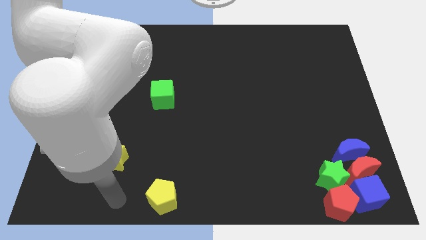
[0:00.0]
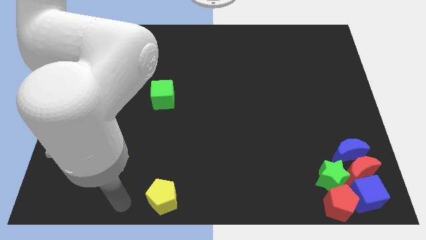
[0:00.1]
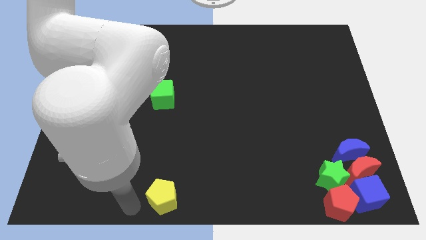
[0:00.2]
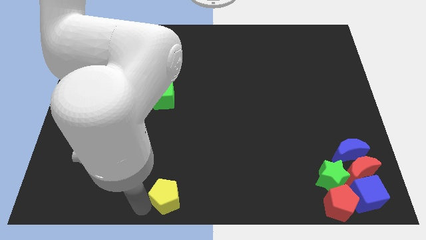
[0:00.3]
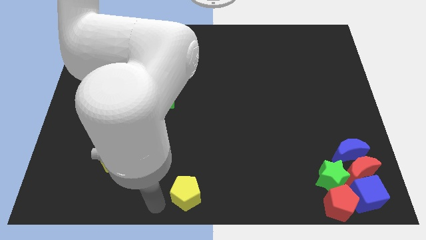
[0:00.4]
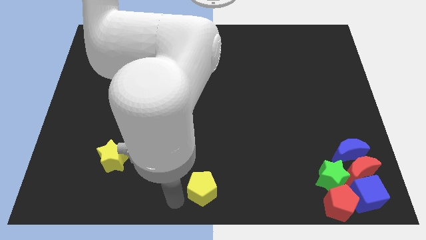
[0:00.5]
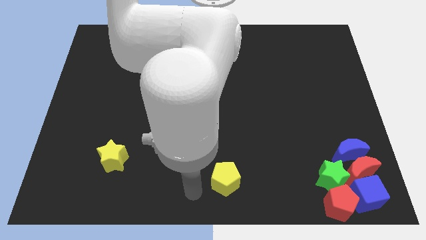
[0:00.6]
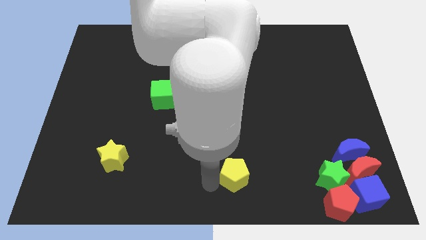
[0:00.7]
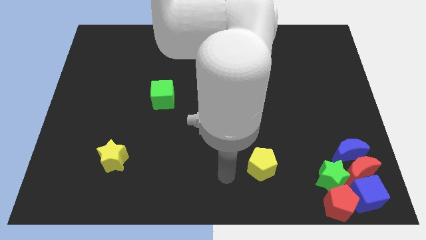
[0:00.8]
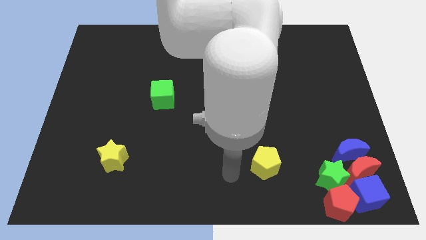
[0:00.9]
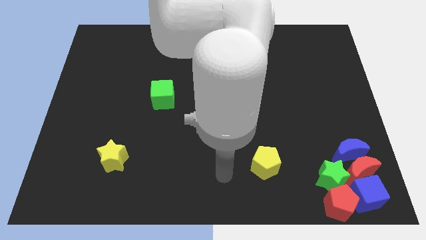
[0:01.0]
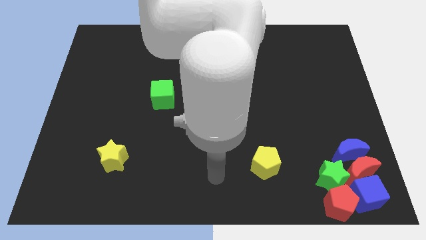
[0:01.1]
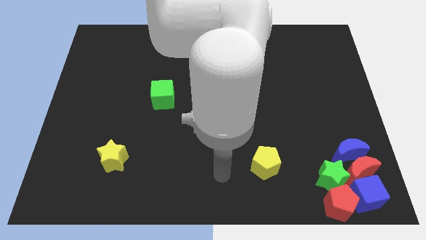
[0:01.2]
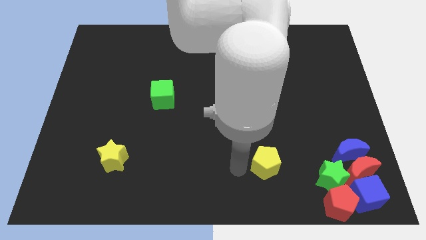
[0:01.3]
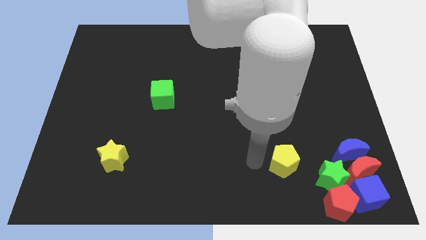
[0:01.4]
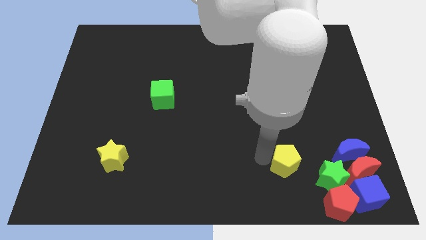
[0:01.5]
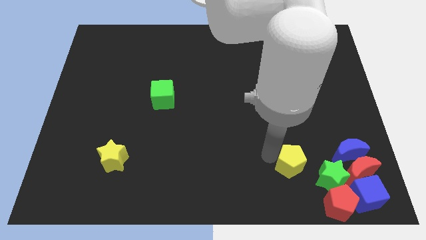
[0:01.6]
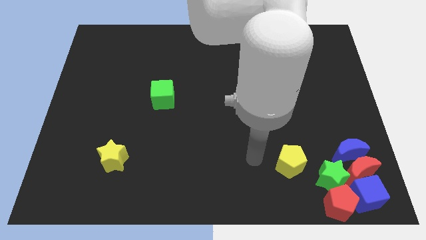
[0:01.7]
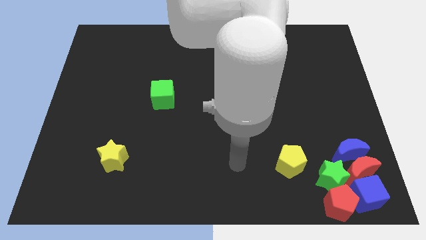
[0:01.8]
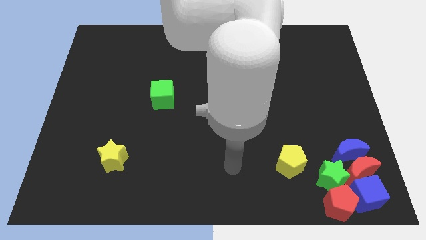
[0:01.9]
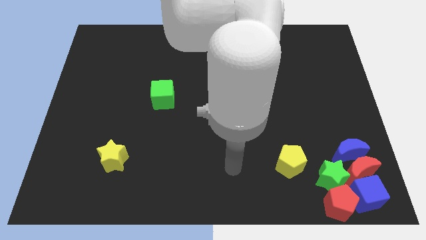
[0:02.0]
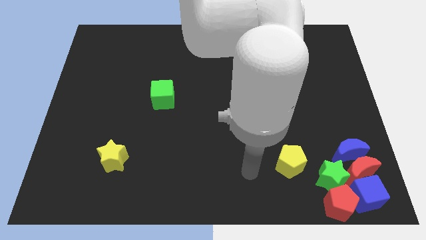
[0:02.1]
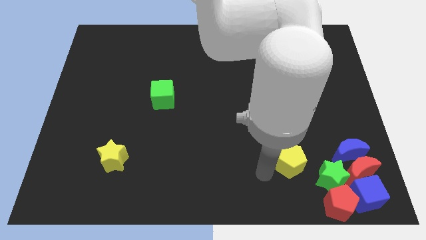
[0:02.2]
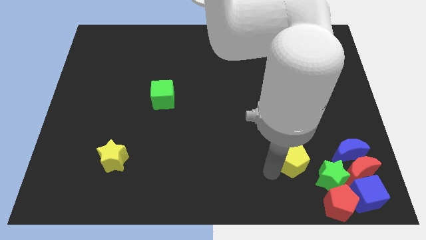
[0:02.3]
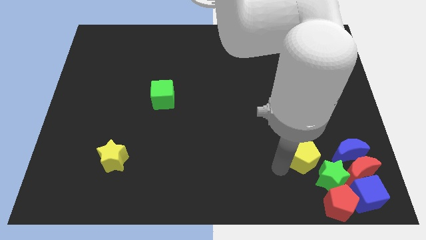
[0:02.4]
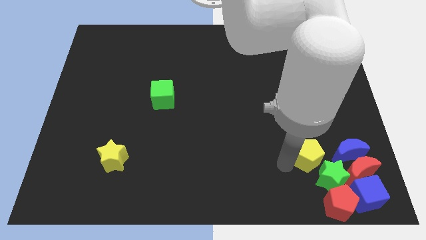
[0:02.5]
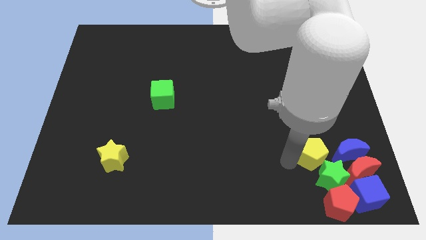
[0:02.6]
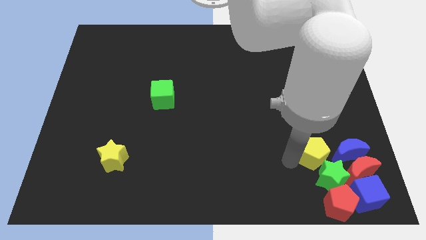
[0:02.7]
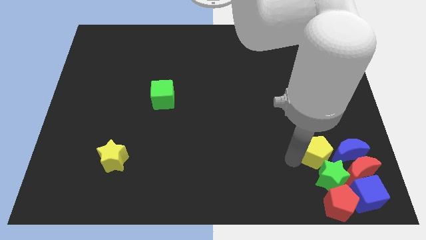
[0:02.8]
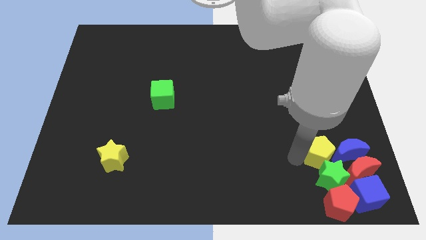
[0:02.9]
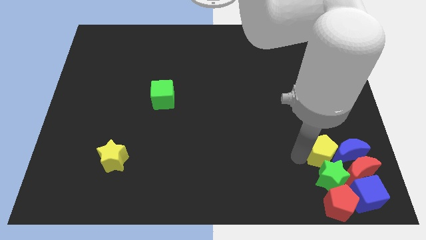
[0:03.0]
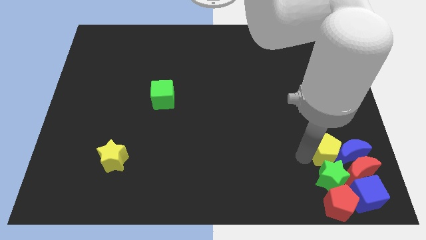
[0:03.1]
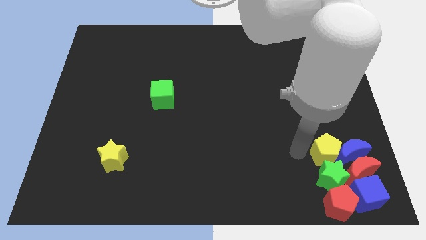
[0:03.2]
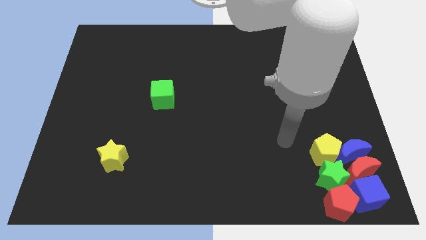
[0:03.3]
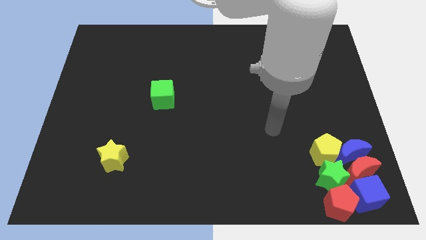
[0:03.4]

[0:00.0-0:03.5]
push the yellow pentagon above the green star

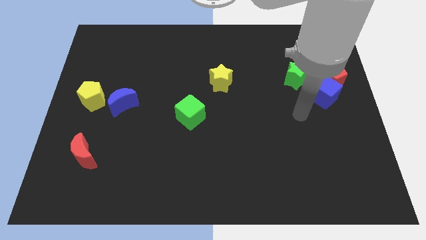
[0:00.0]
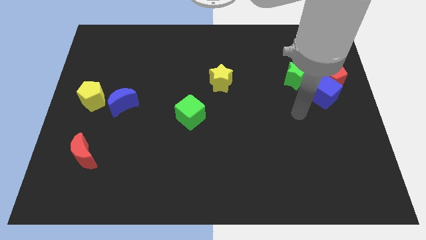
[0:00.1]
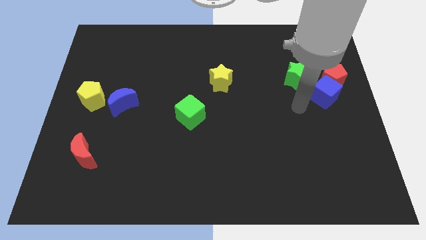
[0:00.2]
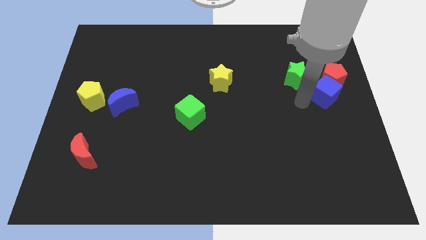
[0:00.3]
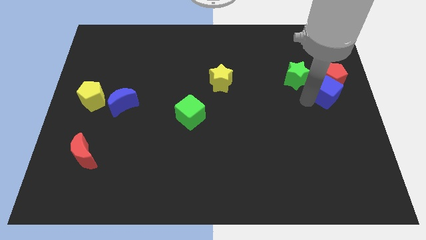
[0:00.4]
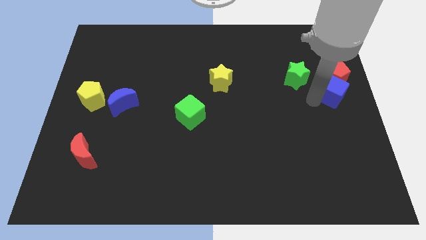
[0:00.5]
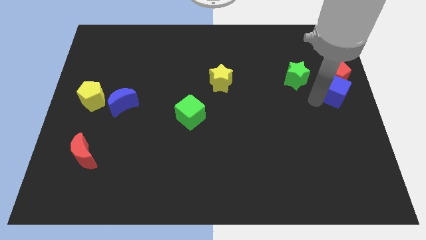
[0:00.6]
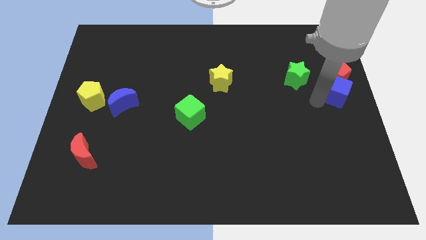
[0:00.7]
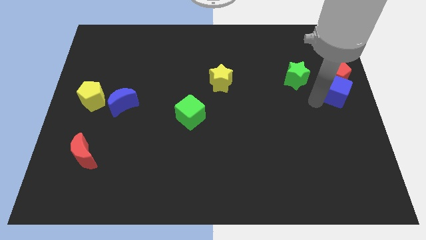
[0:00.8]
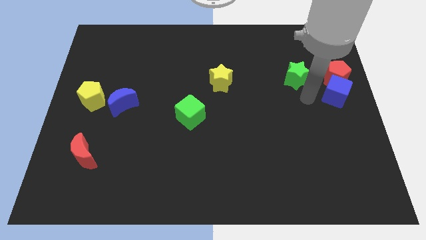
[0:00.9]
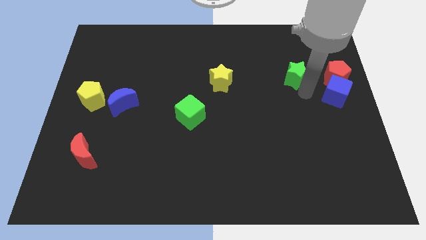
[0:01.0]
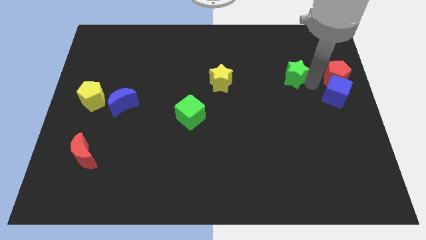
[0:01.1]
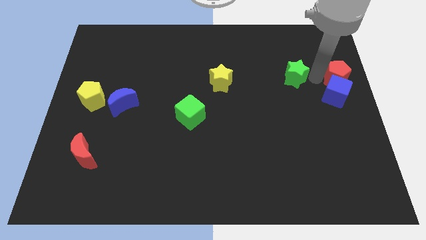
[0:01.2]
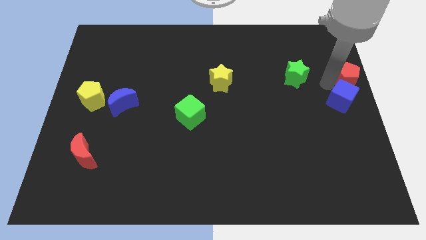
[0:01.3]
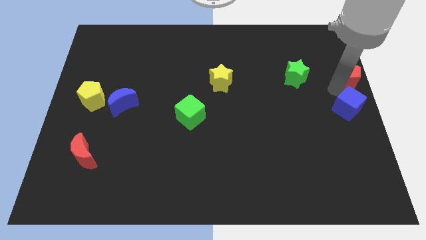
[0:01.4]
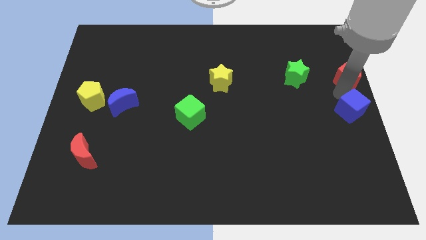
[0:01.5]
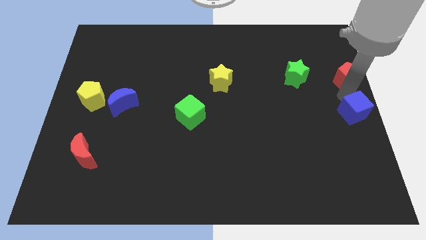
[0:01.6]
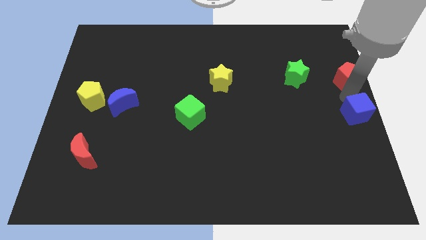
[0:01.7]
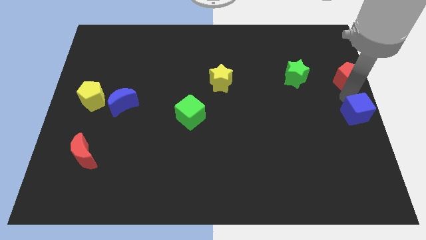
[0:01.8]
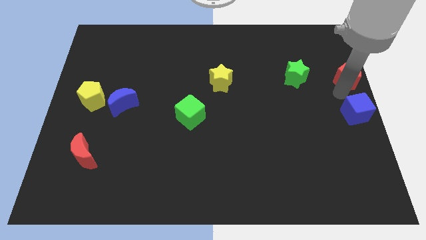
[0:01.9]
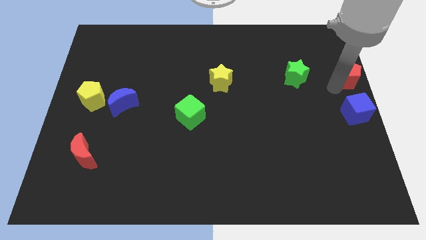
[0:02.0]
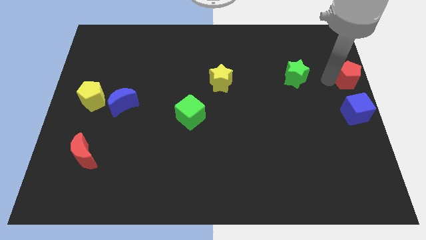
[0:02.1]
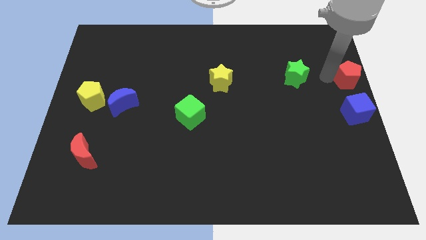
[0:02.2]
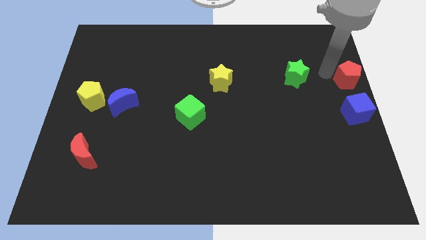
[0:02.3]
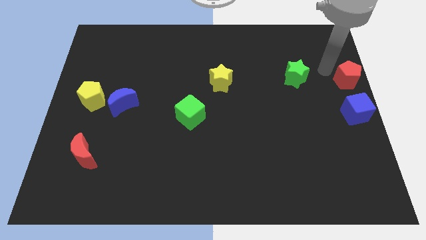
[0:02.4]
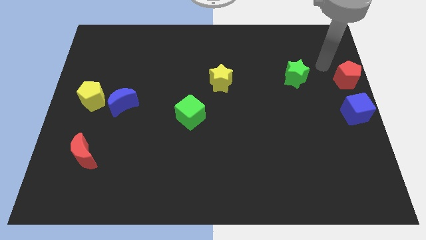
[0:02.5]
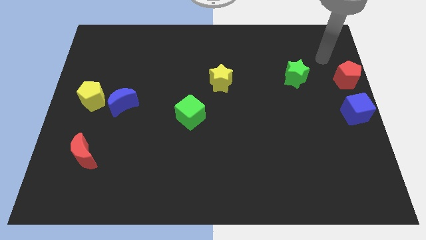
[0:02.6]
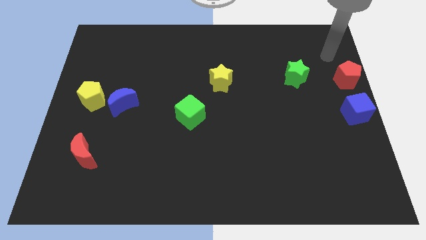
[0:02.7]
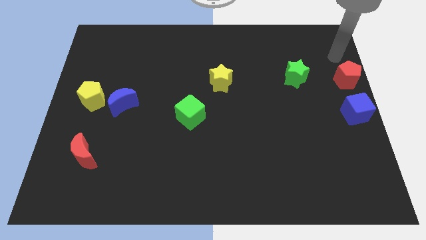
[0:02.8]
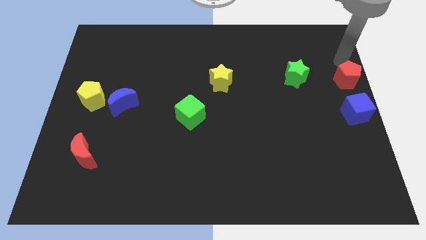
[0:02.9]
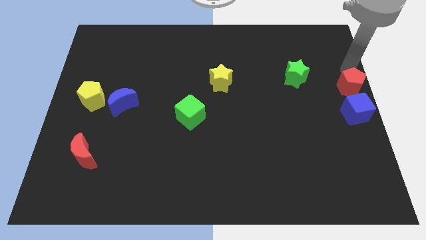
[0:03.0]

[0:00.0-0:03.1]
move the blue cube and the red pentagon to the center right of the board

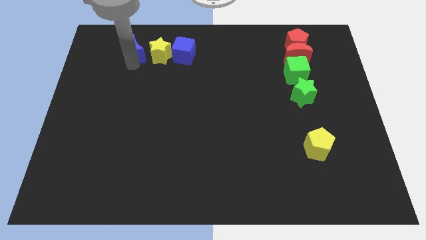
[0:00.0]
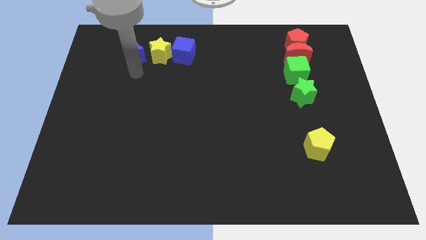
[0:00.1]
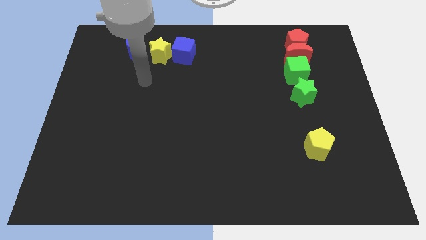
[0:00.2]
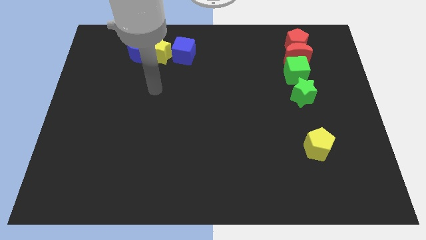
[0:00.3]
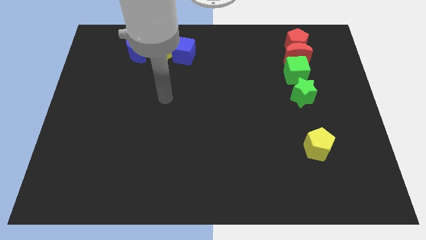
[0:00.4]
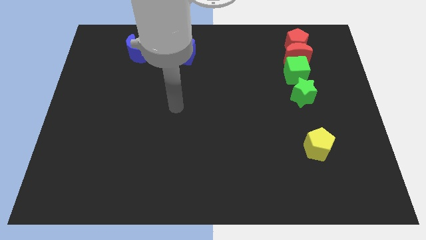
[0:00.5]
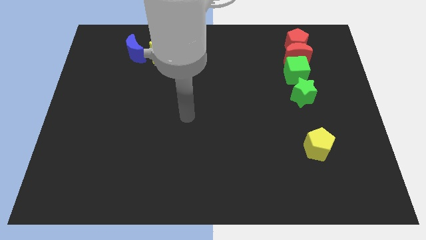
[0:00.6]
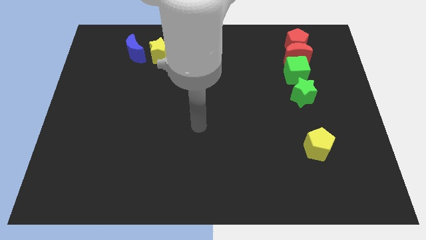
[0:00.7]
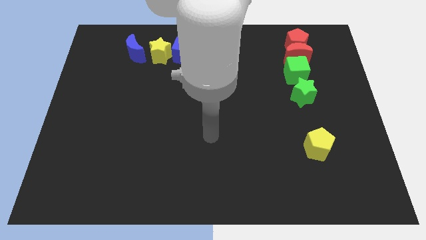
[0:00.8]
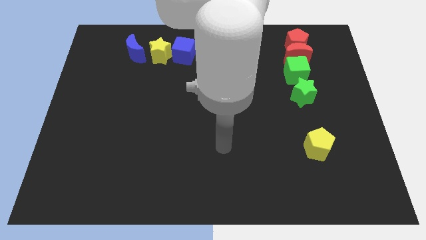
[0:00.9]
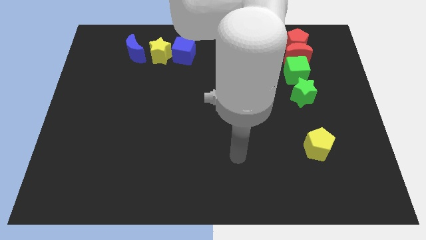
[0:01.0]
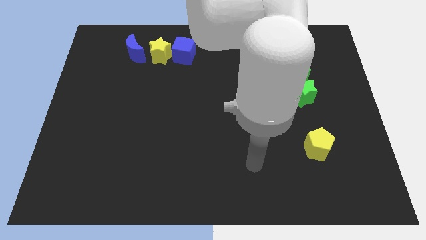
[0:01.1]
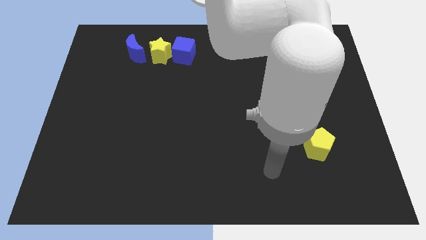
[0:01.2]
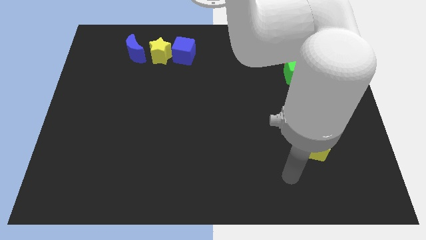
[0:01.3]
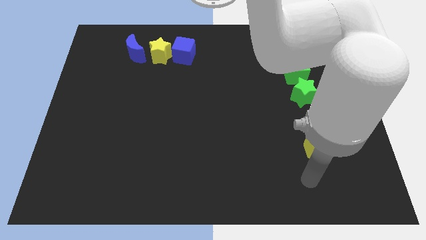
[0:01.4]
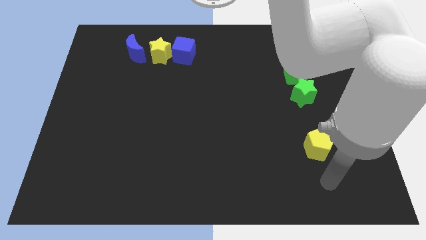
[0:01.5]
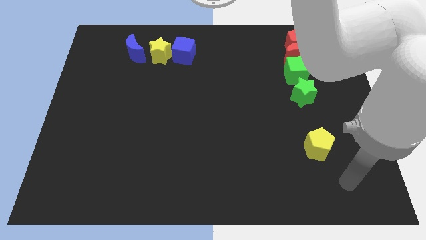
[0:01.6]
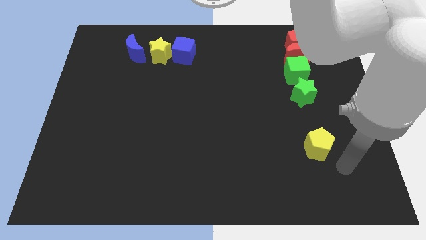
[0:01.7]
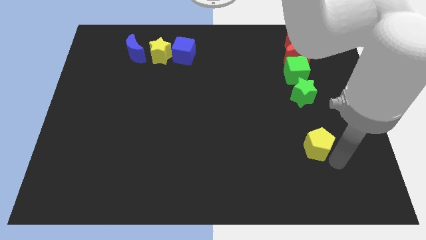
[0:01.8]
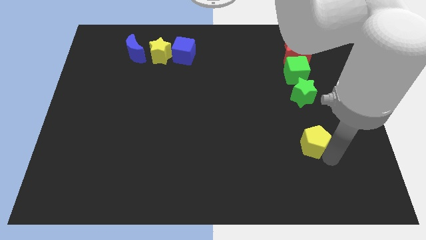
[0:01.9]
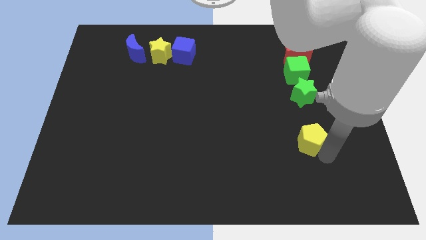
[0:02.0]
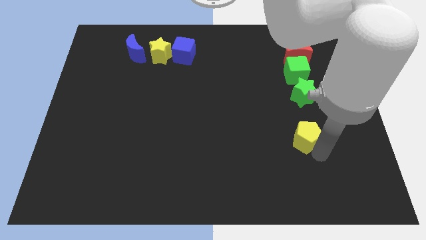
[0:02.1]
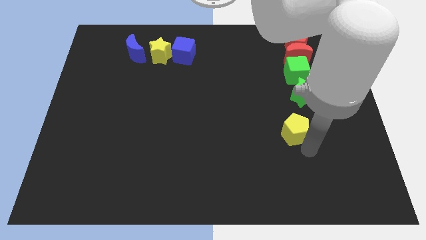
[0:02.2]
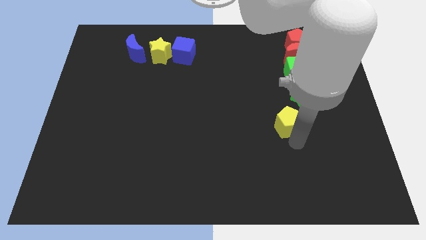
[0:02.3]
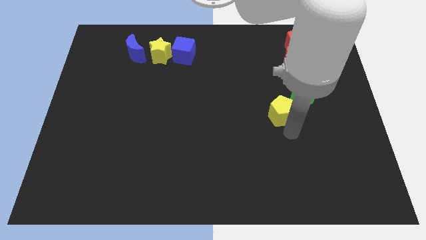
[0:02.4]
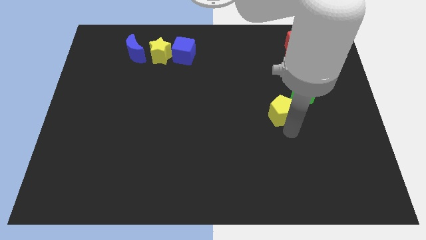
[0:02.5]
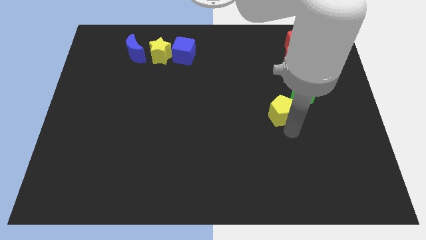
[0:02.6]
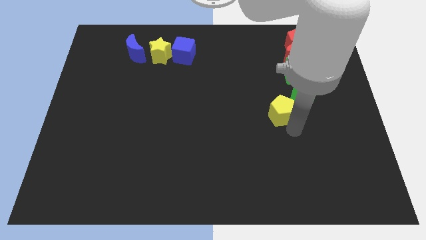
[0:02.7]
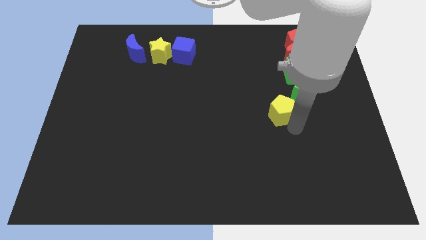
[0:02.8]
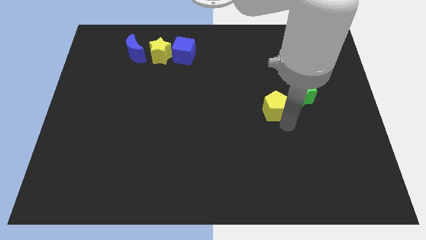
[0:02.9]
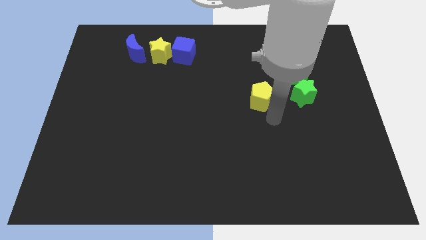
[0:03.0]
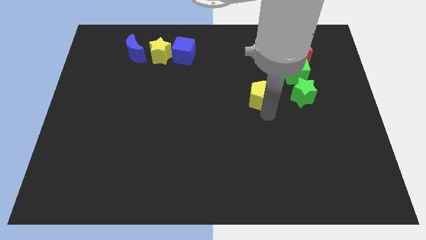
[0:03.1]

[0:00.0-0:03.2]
move the yellow pentagon to the left side of the green star
